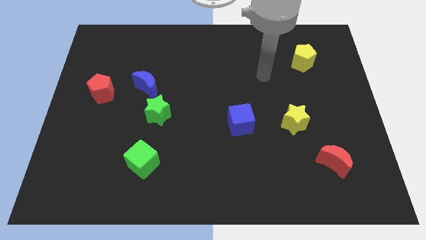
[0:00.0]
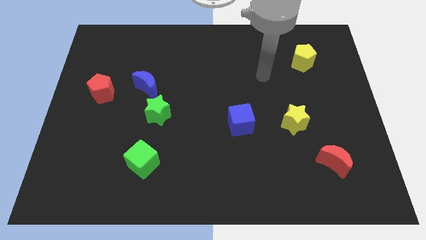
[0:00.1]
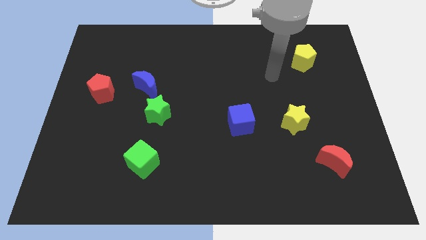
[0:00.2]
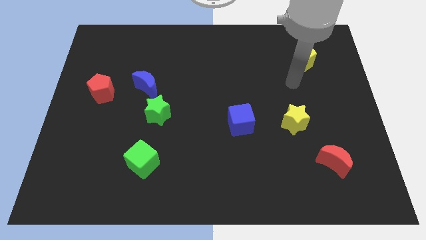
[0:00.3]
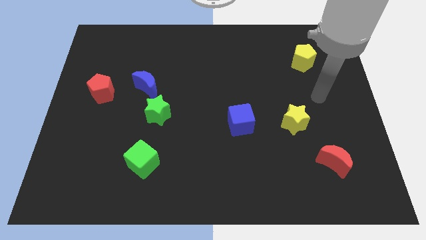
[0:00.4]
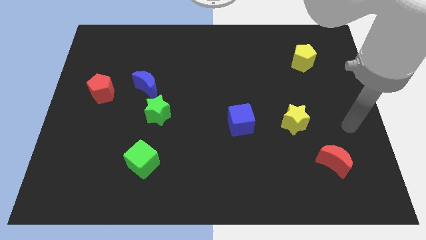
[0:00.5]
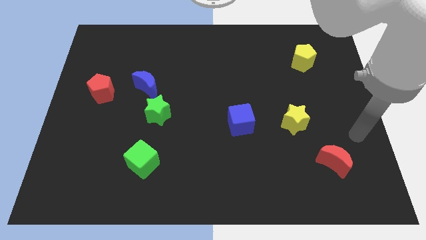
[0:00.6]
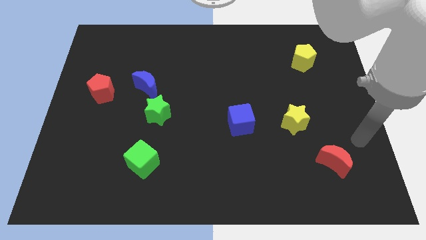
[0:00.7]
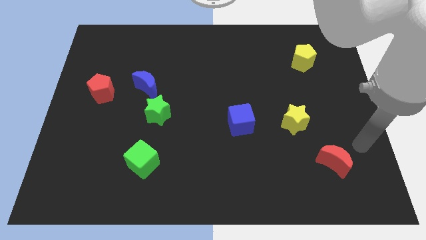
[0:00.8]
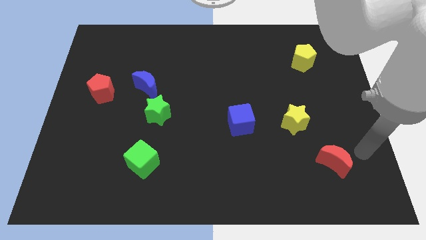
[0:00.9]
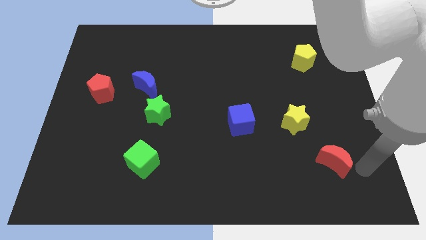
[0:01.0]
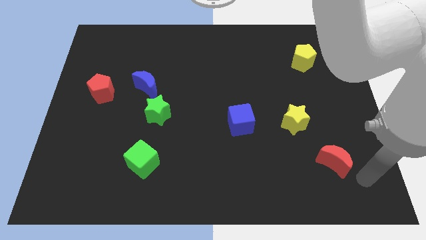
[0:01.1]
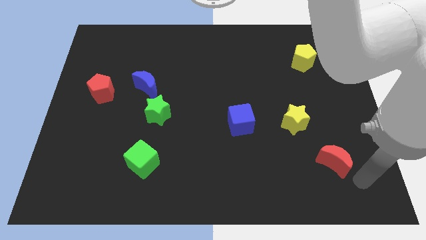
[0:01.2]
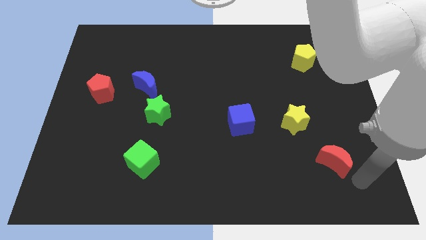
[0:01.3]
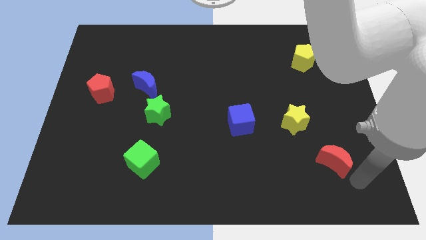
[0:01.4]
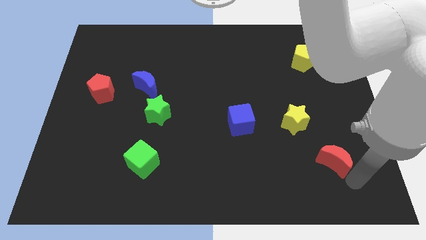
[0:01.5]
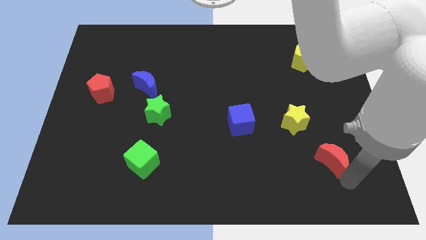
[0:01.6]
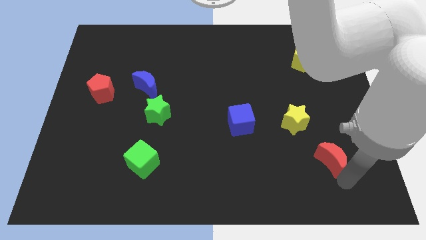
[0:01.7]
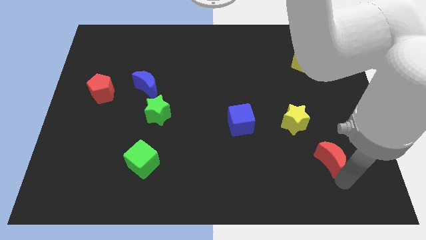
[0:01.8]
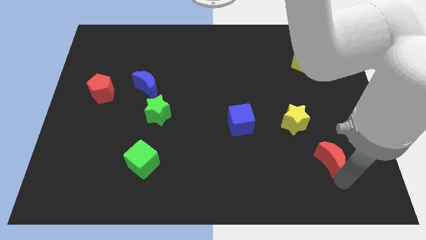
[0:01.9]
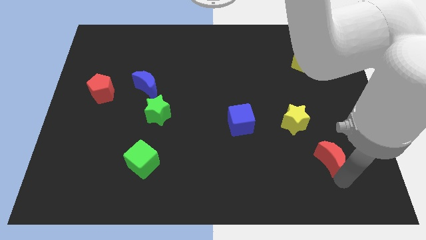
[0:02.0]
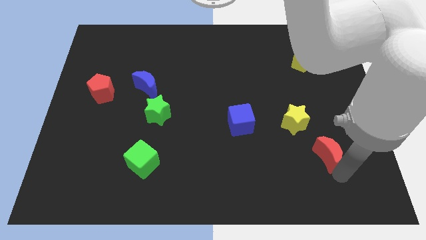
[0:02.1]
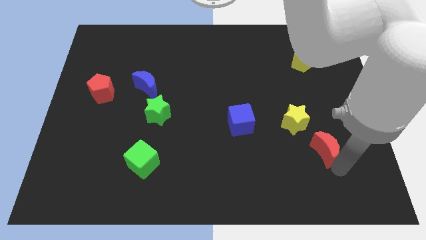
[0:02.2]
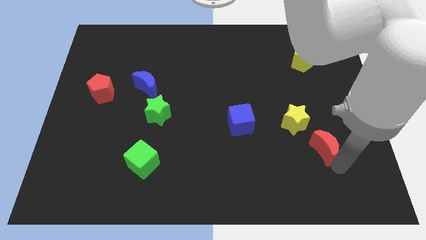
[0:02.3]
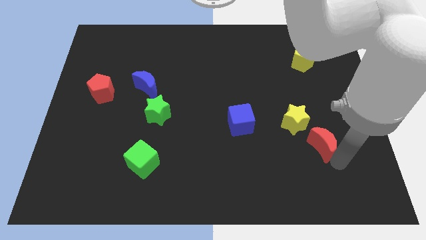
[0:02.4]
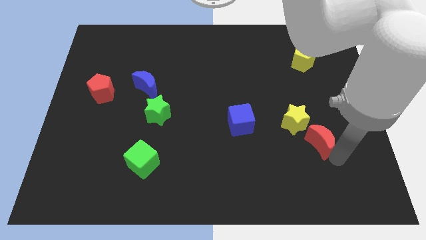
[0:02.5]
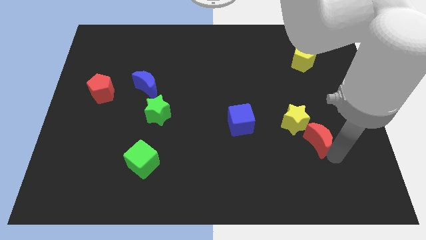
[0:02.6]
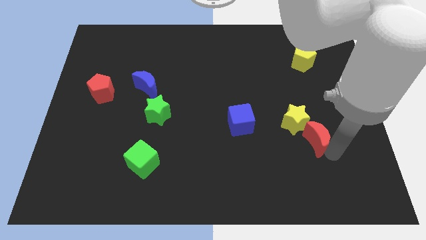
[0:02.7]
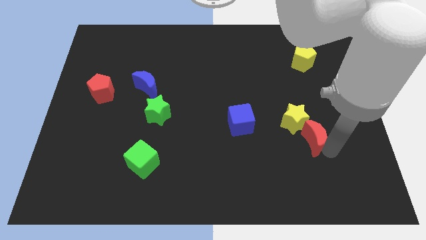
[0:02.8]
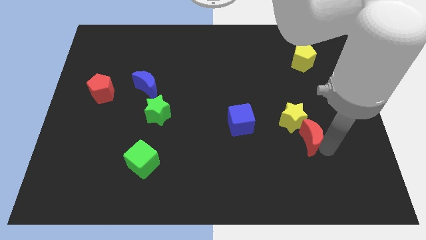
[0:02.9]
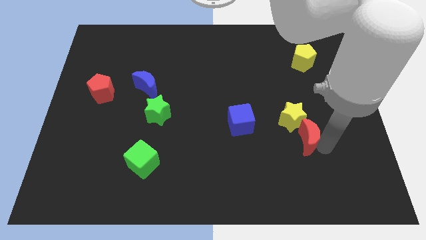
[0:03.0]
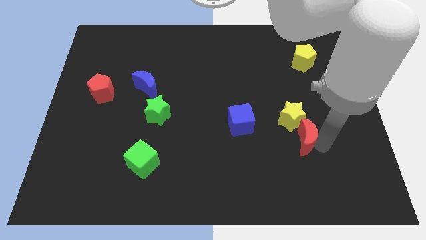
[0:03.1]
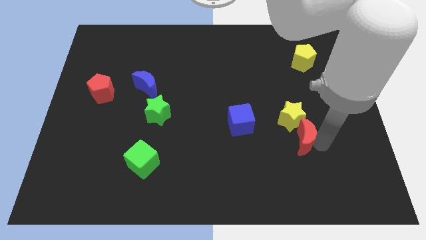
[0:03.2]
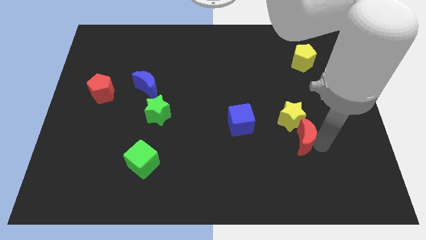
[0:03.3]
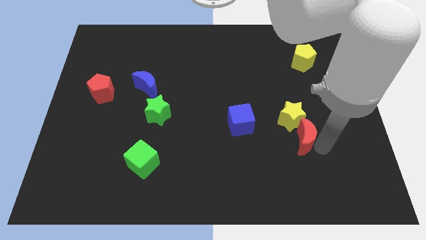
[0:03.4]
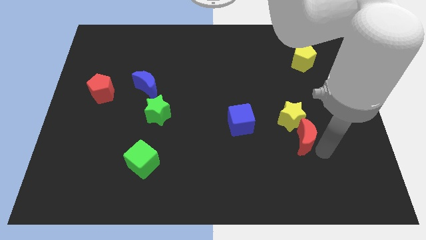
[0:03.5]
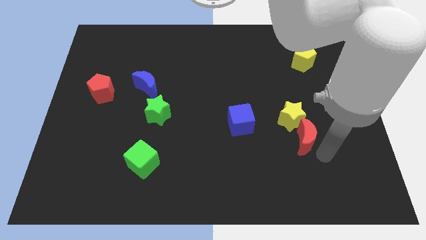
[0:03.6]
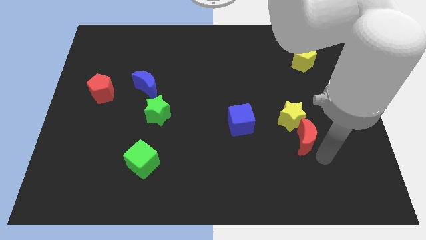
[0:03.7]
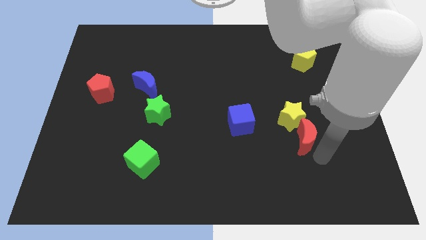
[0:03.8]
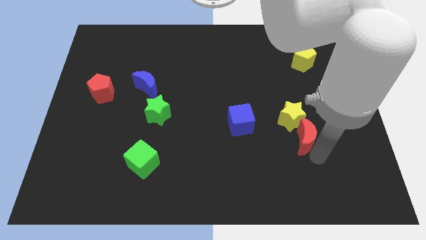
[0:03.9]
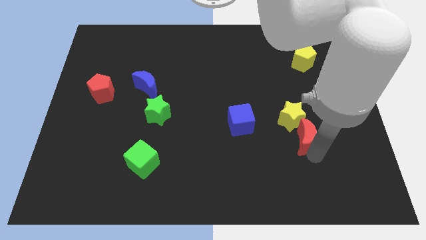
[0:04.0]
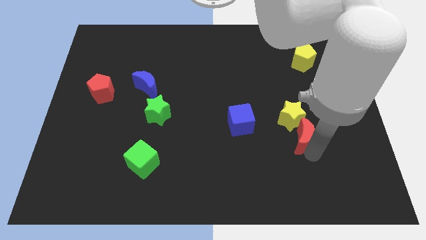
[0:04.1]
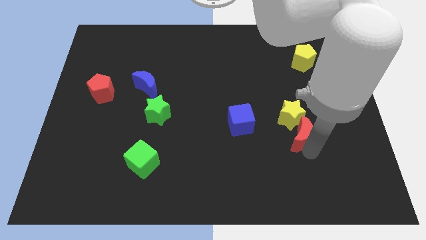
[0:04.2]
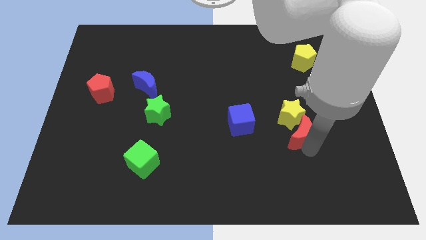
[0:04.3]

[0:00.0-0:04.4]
put the red moon to the yellow star

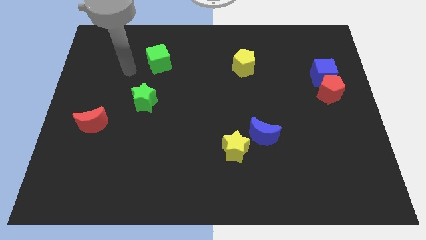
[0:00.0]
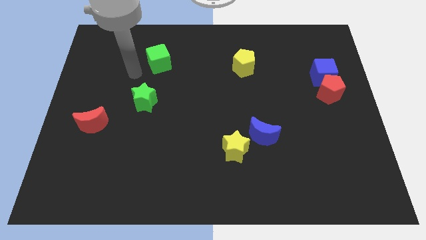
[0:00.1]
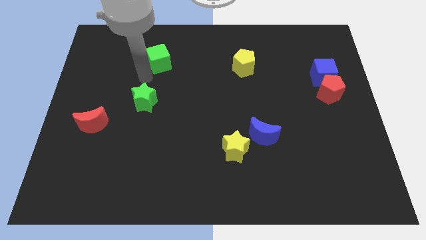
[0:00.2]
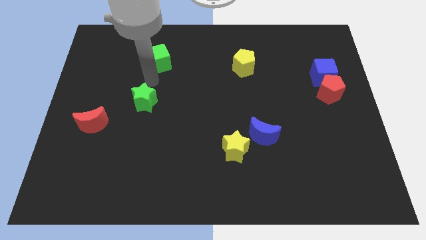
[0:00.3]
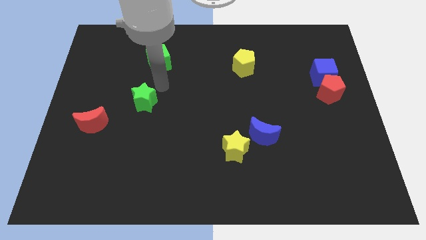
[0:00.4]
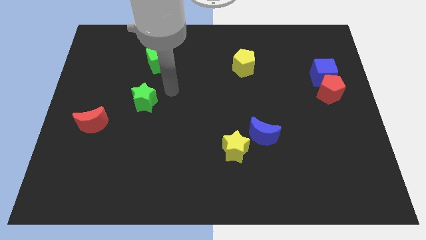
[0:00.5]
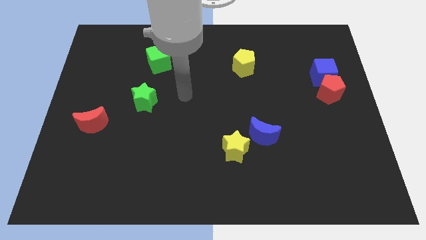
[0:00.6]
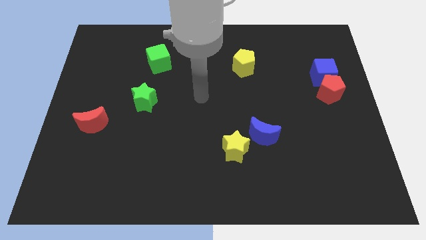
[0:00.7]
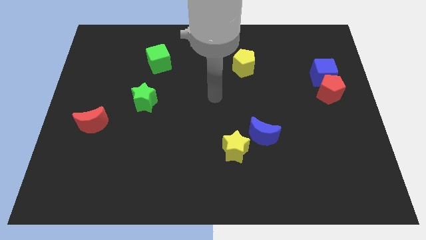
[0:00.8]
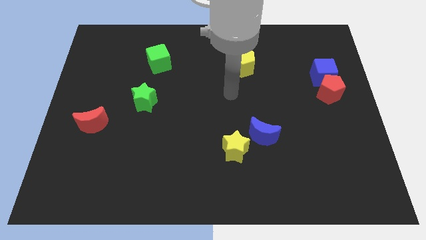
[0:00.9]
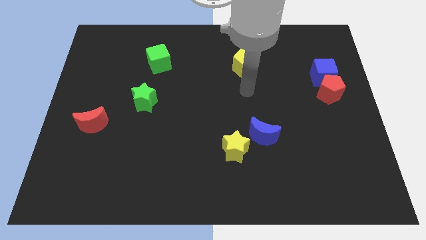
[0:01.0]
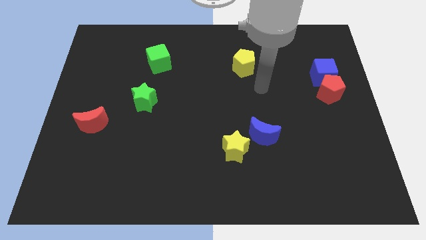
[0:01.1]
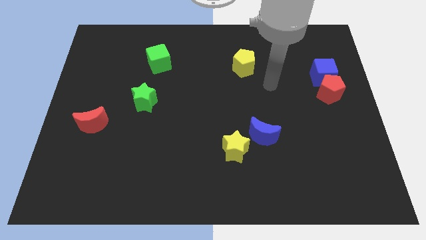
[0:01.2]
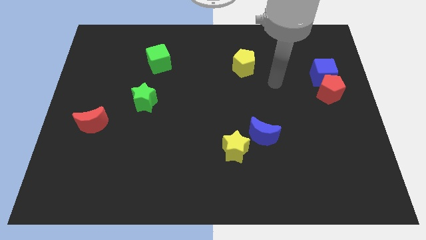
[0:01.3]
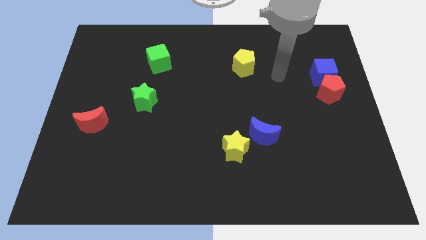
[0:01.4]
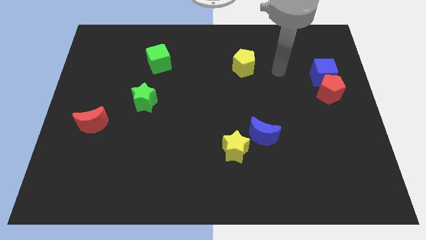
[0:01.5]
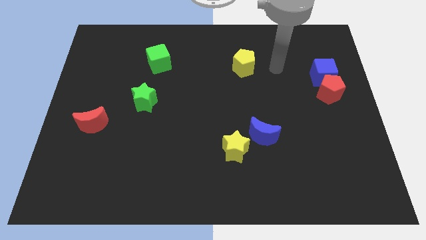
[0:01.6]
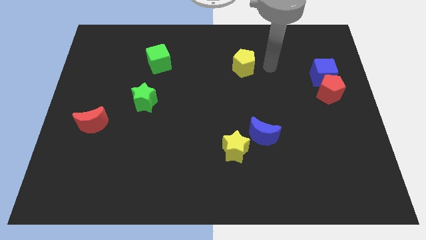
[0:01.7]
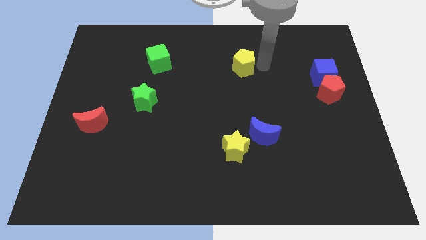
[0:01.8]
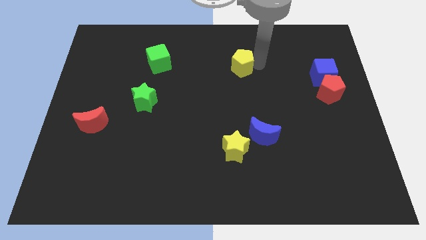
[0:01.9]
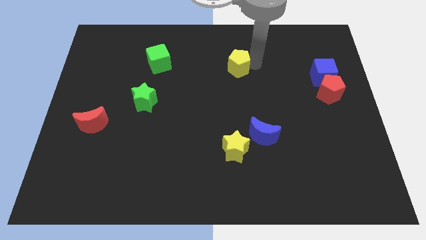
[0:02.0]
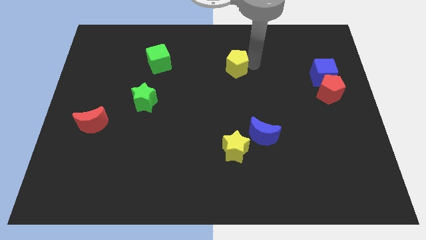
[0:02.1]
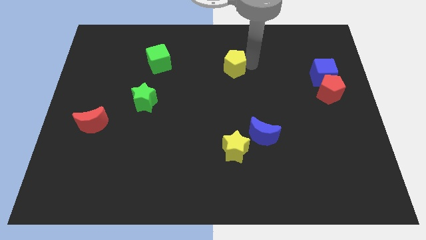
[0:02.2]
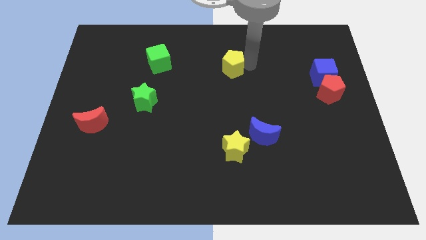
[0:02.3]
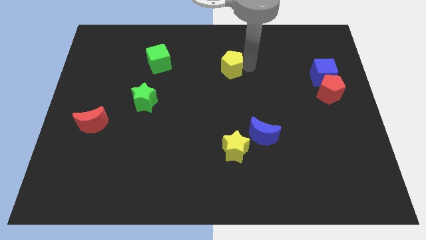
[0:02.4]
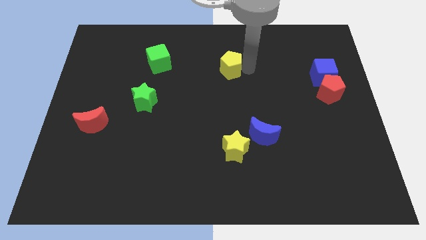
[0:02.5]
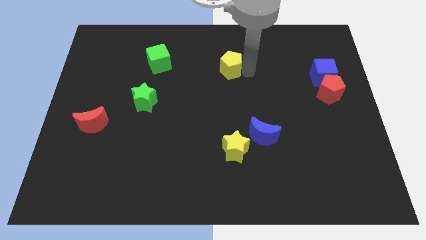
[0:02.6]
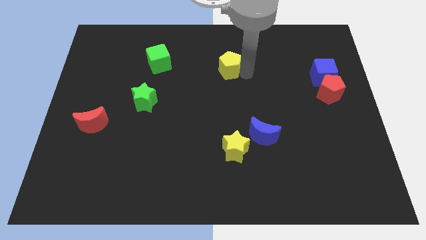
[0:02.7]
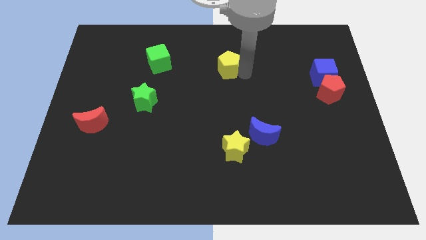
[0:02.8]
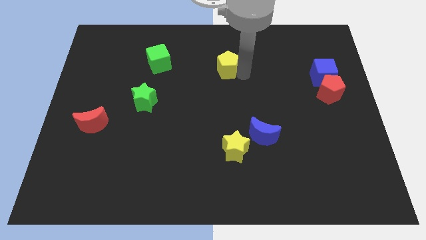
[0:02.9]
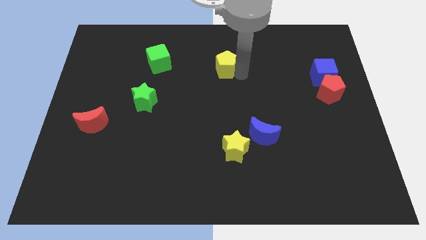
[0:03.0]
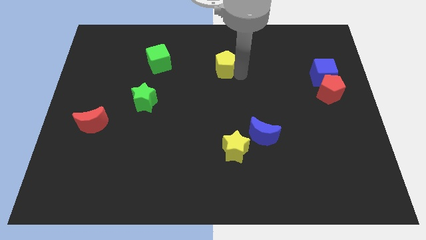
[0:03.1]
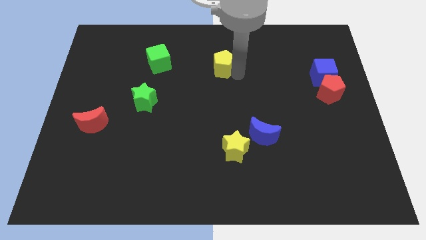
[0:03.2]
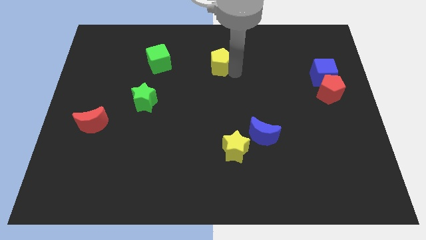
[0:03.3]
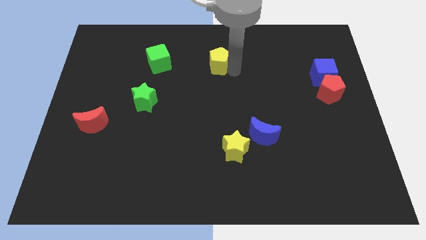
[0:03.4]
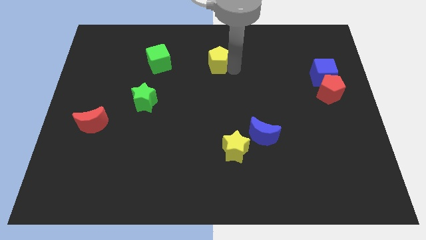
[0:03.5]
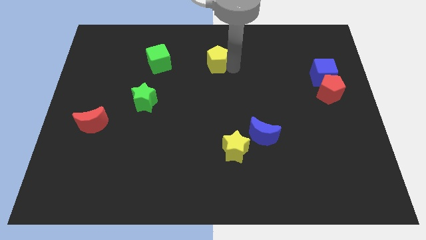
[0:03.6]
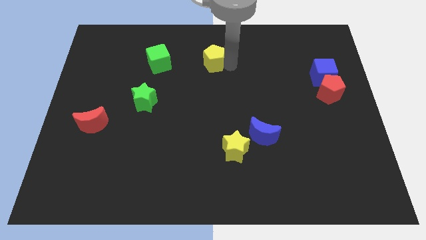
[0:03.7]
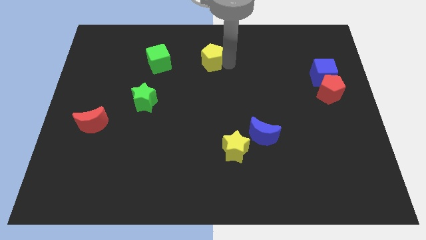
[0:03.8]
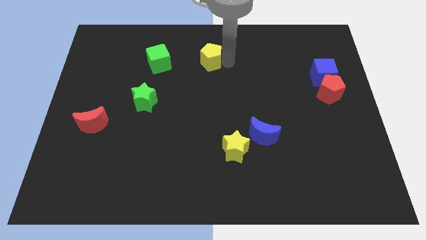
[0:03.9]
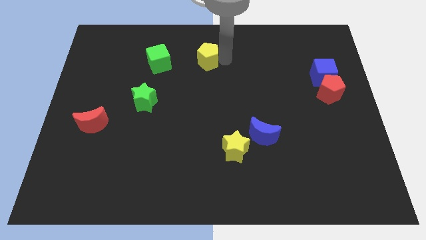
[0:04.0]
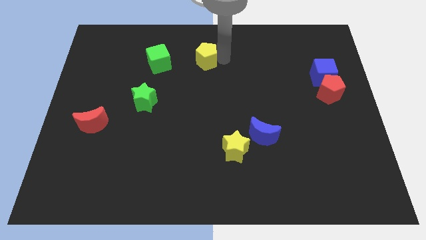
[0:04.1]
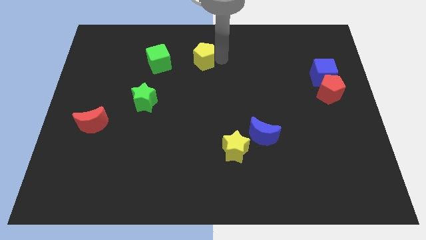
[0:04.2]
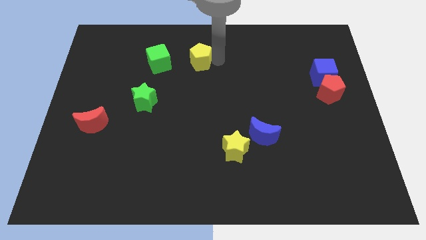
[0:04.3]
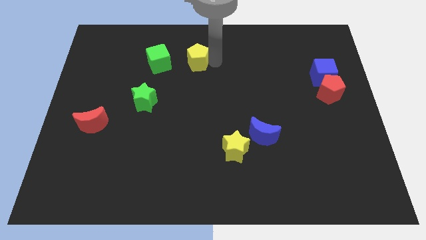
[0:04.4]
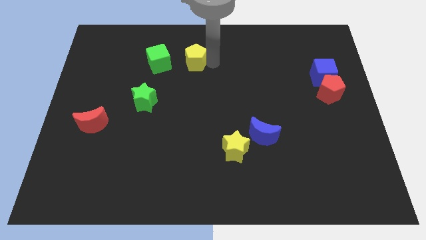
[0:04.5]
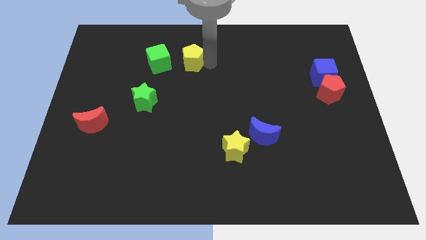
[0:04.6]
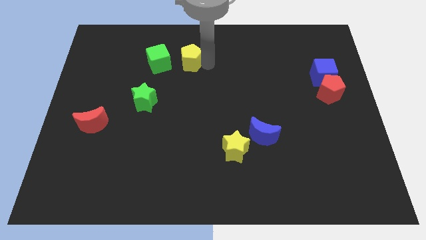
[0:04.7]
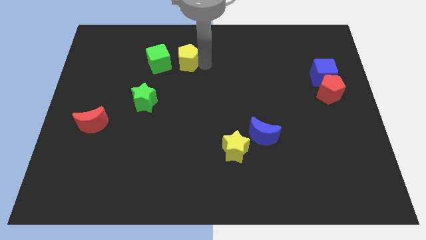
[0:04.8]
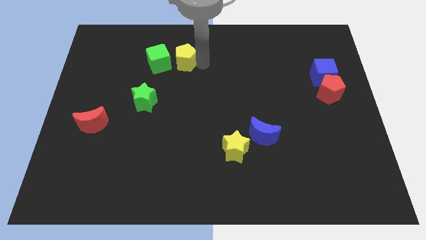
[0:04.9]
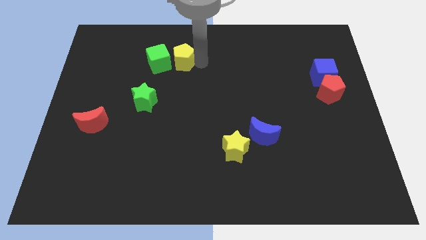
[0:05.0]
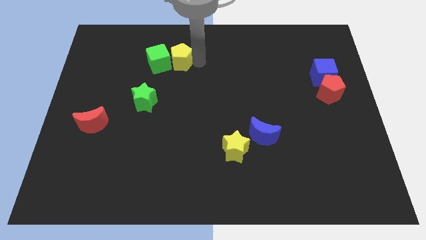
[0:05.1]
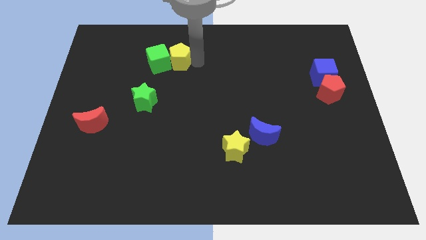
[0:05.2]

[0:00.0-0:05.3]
slide the yellow pentagon next to the green cube
